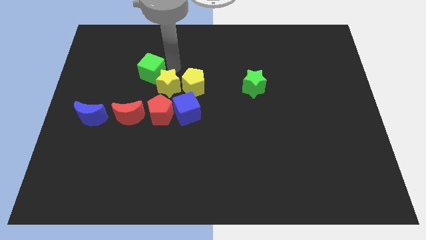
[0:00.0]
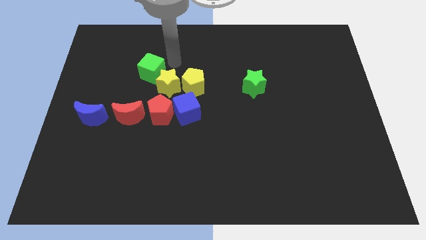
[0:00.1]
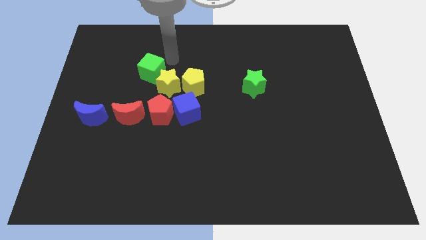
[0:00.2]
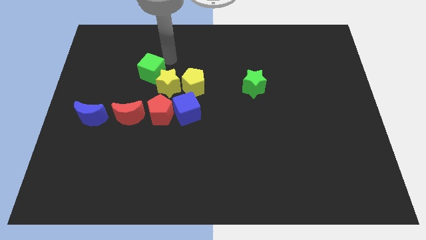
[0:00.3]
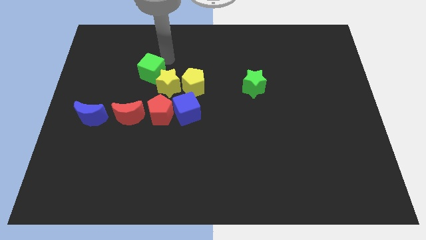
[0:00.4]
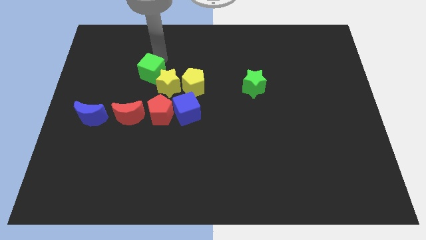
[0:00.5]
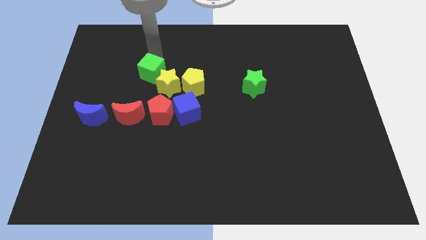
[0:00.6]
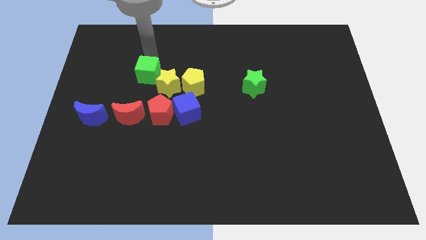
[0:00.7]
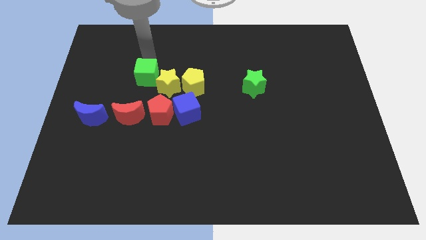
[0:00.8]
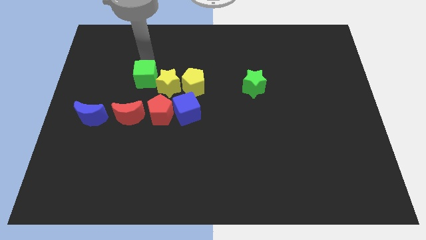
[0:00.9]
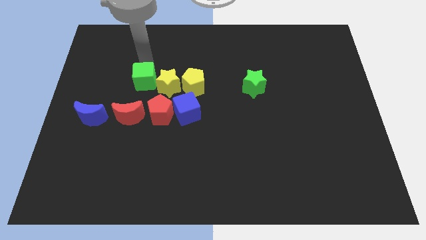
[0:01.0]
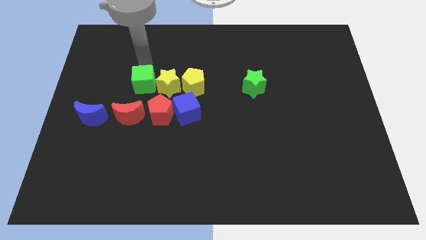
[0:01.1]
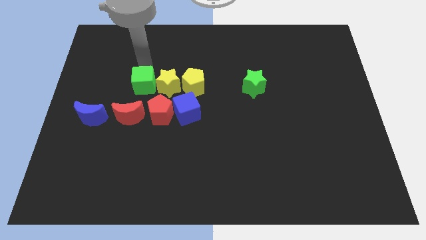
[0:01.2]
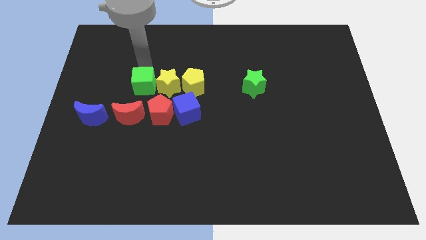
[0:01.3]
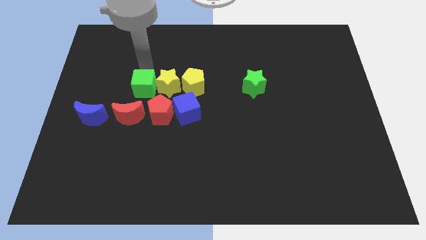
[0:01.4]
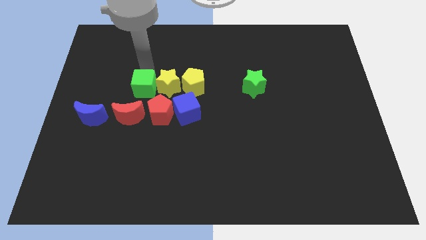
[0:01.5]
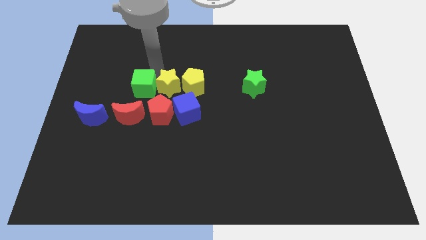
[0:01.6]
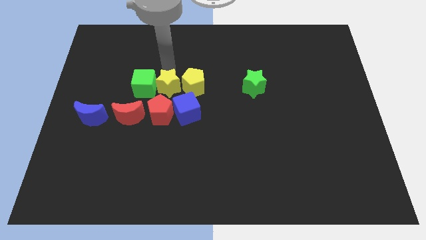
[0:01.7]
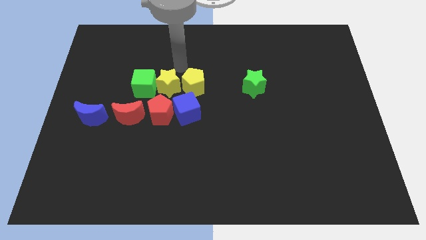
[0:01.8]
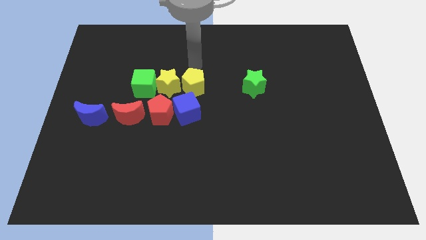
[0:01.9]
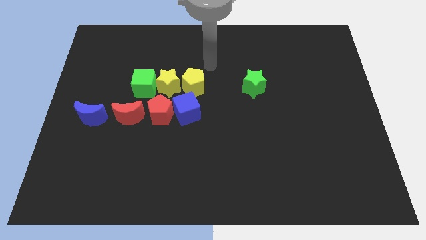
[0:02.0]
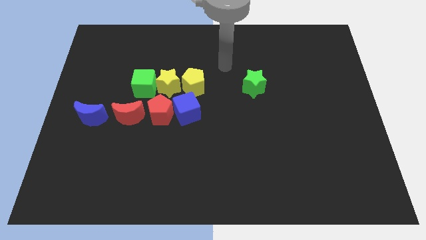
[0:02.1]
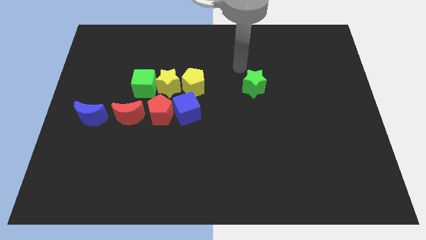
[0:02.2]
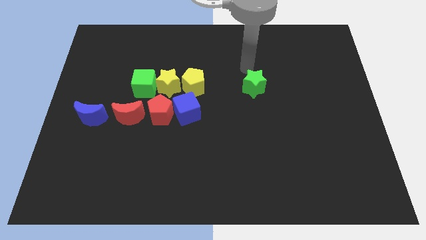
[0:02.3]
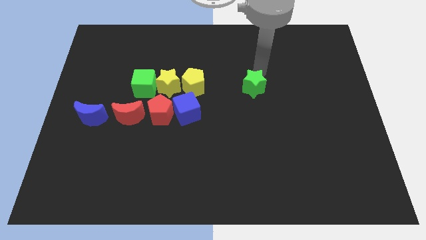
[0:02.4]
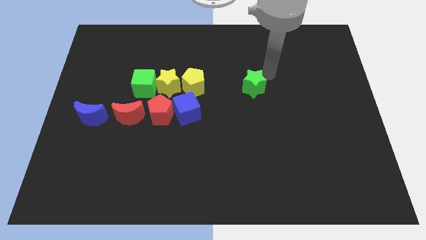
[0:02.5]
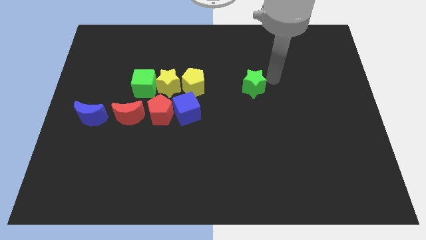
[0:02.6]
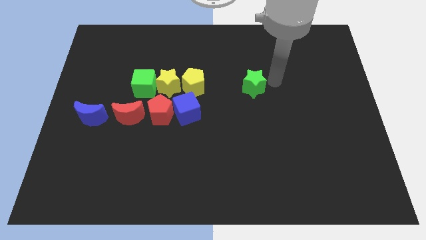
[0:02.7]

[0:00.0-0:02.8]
push the green cube slightly towards the left of the yellow star

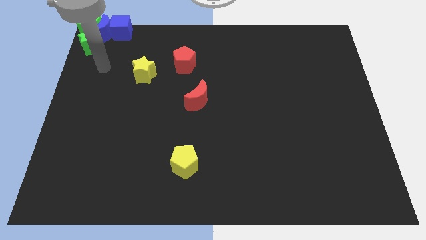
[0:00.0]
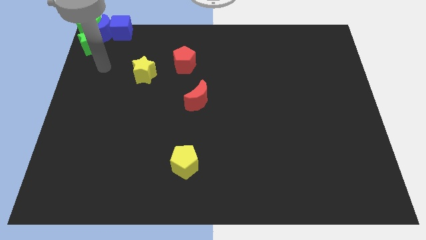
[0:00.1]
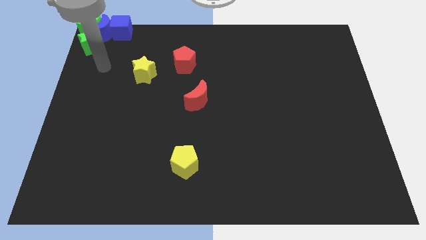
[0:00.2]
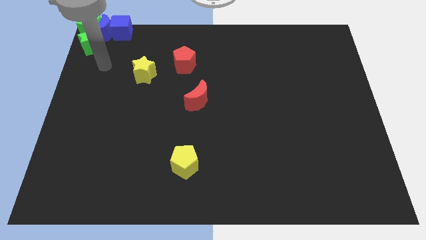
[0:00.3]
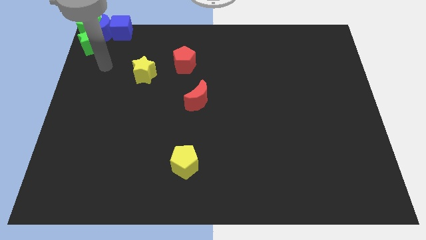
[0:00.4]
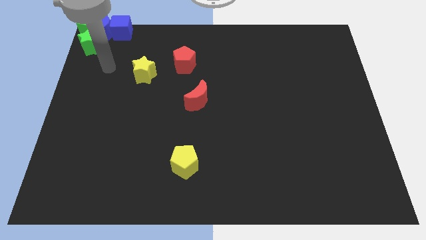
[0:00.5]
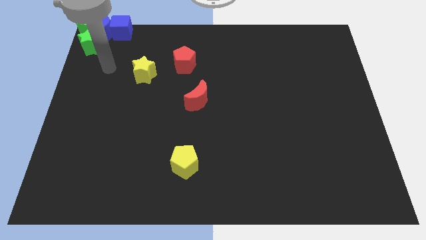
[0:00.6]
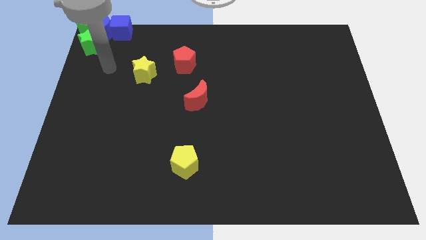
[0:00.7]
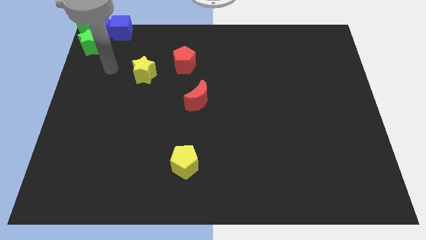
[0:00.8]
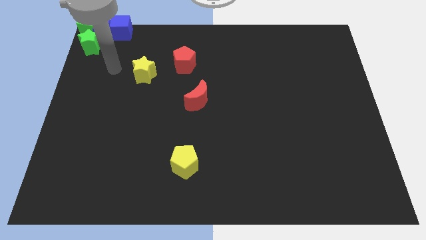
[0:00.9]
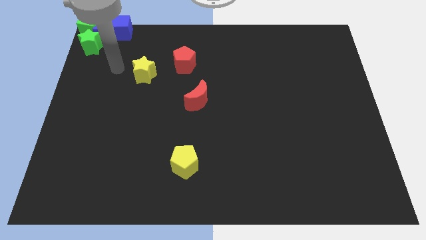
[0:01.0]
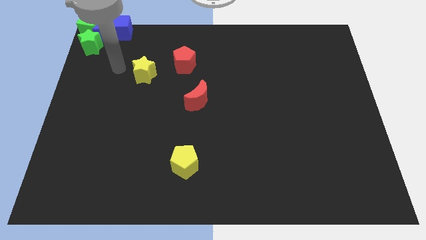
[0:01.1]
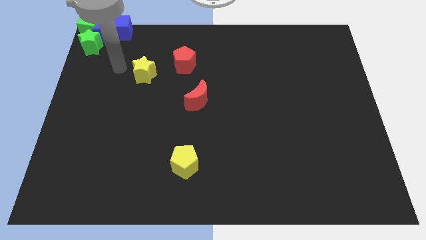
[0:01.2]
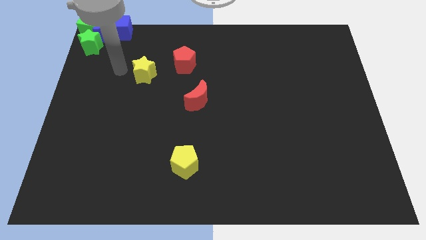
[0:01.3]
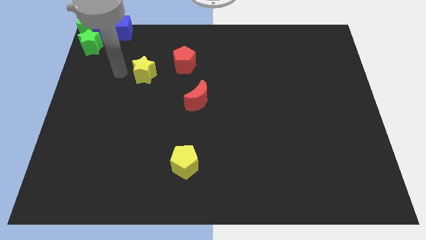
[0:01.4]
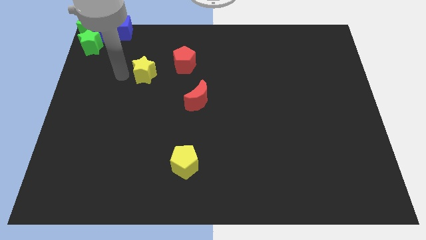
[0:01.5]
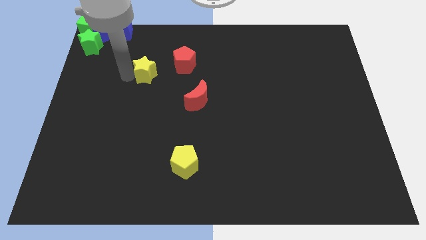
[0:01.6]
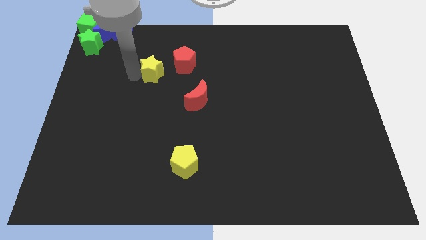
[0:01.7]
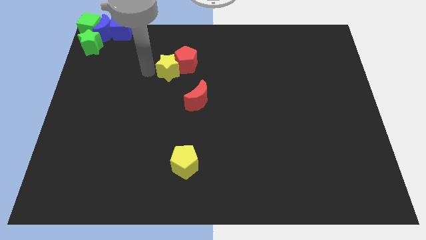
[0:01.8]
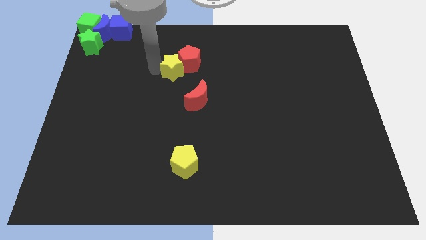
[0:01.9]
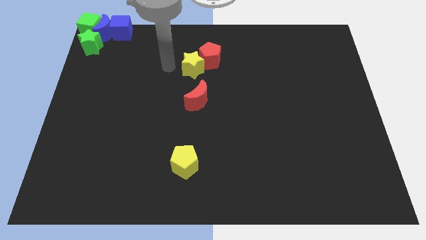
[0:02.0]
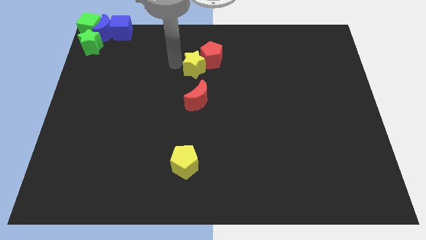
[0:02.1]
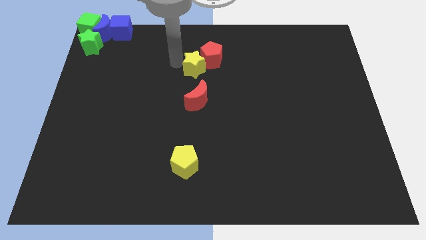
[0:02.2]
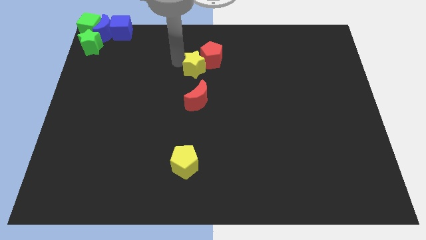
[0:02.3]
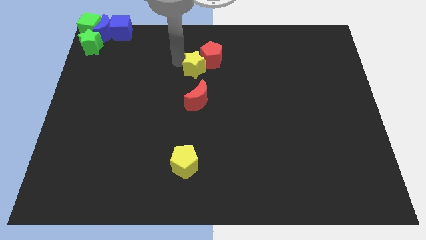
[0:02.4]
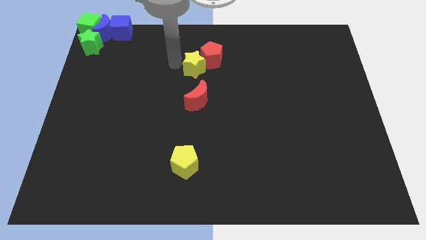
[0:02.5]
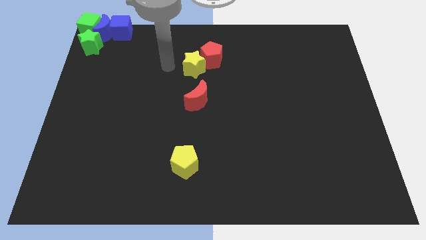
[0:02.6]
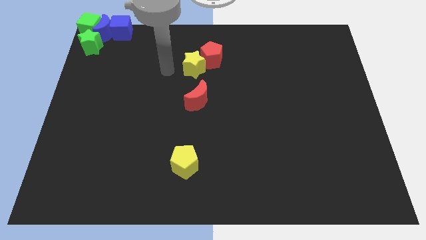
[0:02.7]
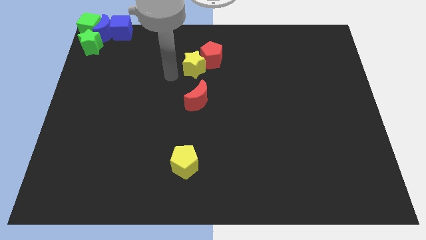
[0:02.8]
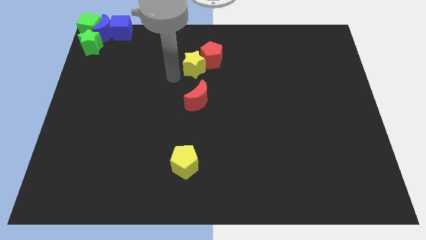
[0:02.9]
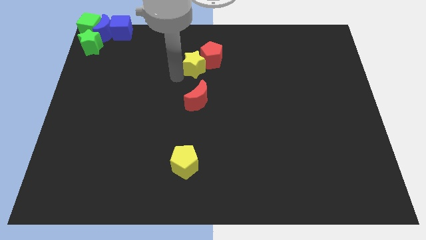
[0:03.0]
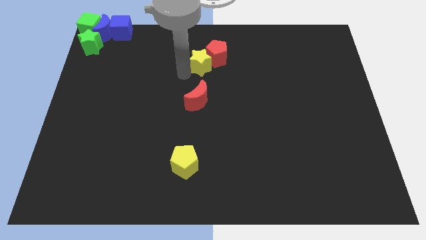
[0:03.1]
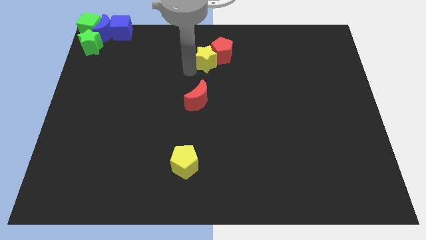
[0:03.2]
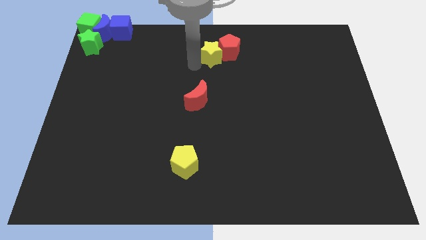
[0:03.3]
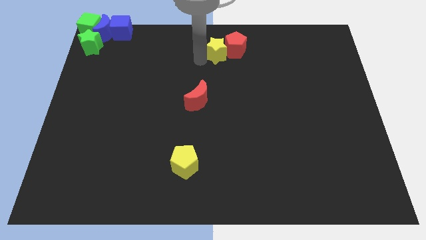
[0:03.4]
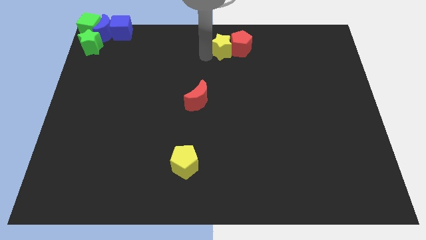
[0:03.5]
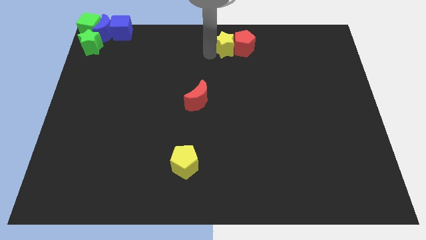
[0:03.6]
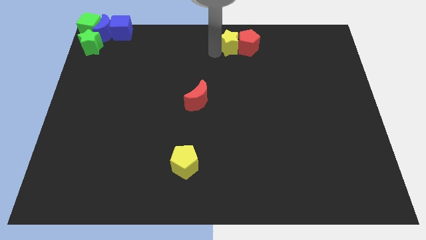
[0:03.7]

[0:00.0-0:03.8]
move the yellow star and the red pentagon towards the top center of the board

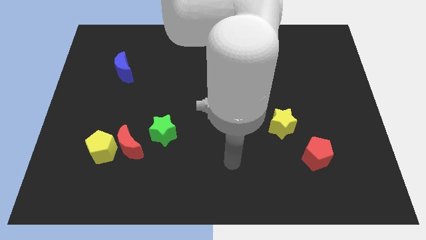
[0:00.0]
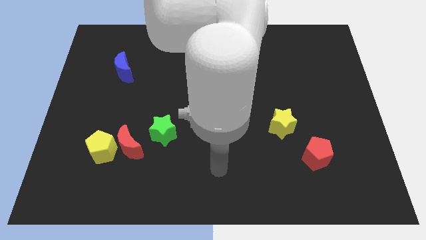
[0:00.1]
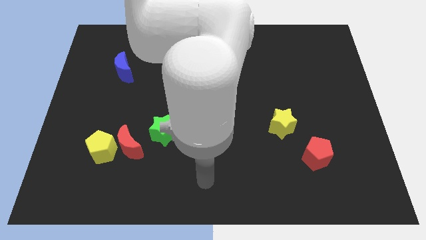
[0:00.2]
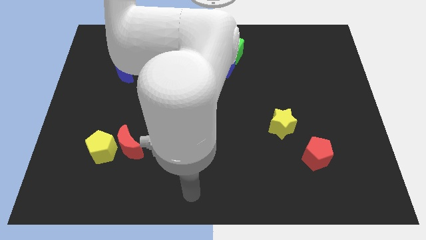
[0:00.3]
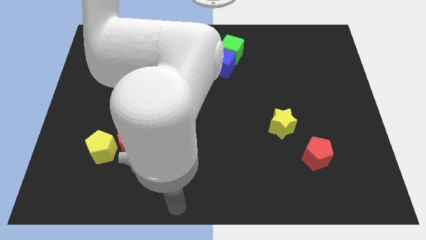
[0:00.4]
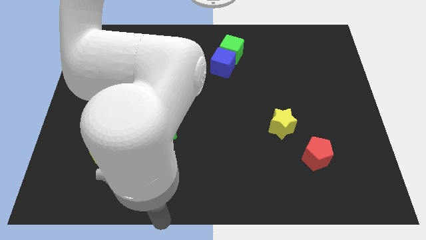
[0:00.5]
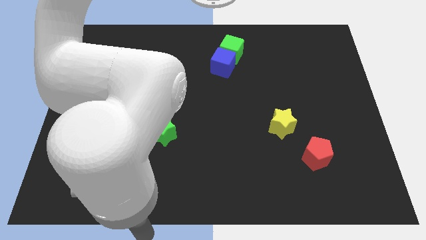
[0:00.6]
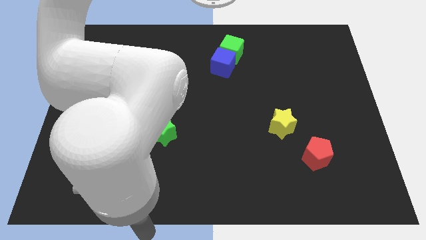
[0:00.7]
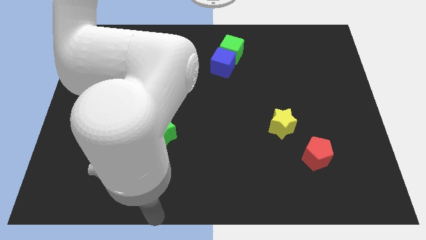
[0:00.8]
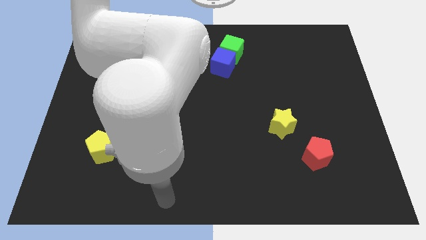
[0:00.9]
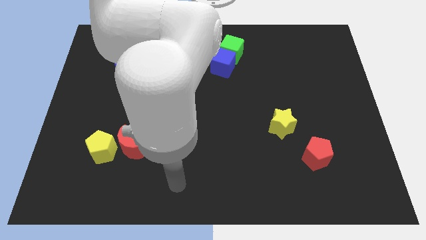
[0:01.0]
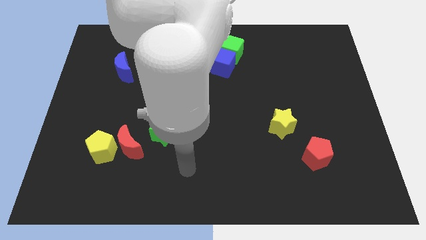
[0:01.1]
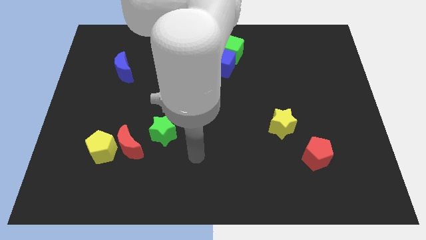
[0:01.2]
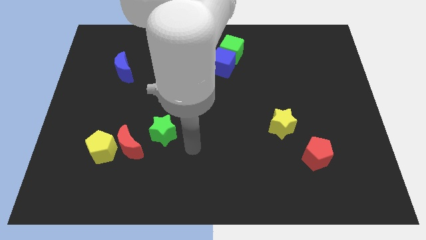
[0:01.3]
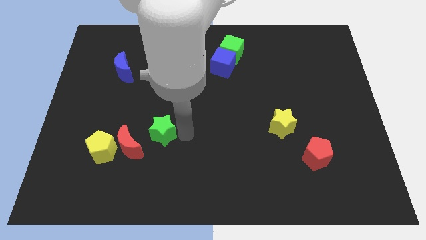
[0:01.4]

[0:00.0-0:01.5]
point your arm at the right side of the green star

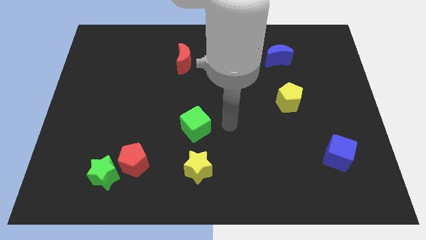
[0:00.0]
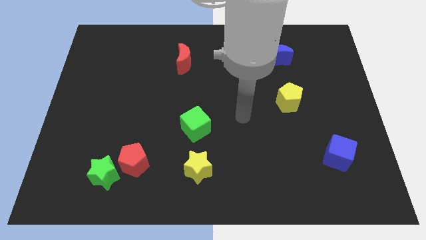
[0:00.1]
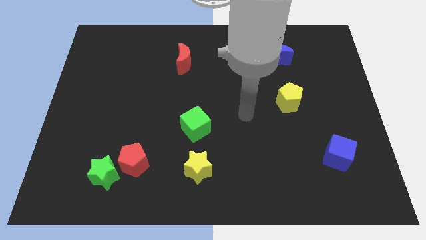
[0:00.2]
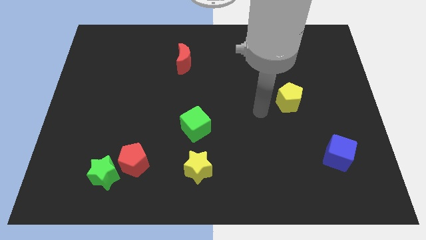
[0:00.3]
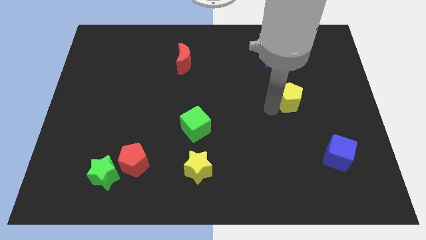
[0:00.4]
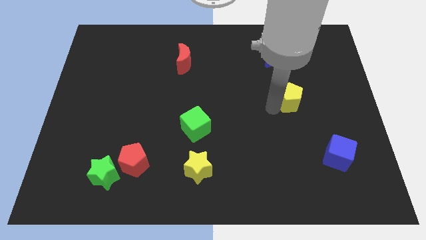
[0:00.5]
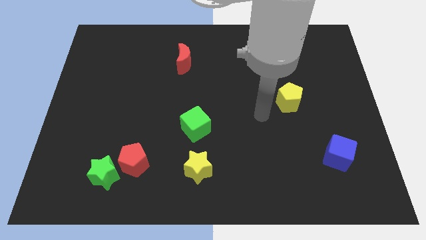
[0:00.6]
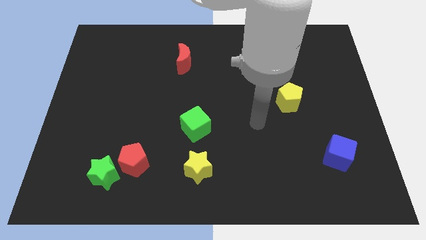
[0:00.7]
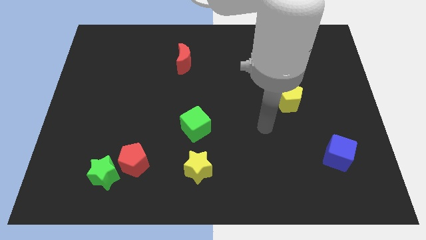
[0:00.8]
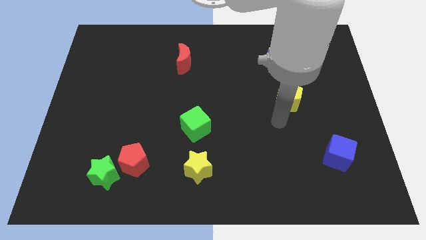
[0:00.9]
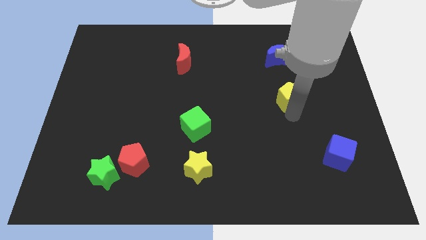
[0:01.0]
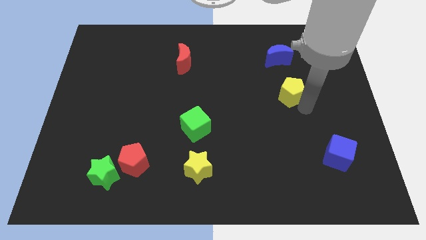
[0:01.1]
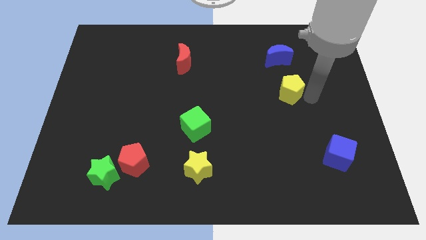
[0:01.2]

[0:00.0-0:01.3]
touch the bottom side of the yellow pentagon
